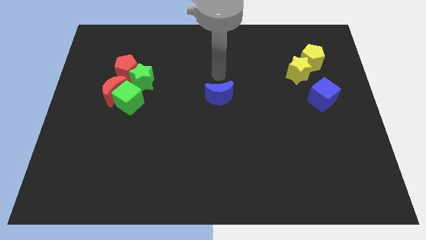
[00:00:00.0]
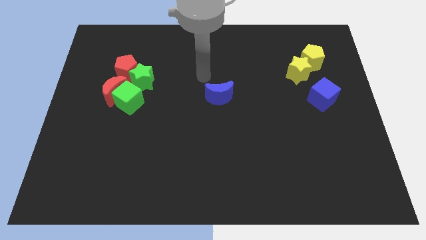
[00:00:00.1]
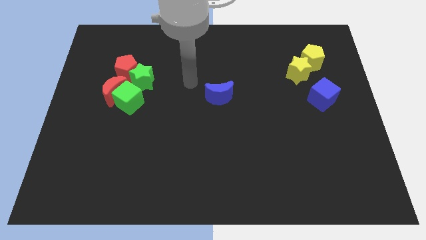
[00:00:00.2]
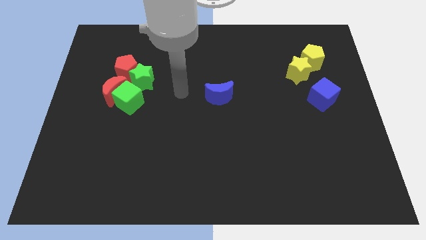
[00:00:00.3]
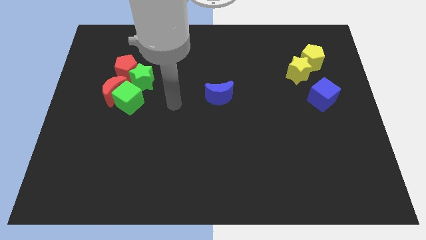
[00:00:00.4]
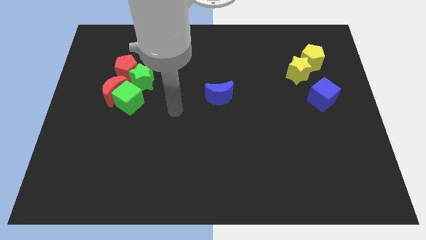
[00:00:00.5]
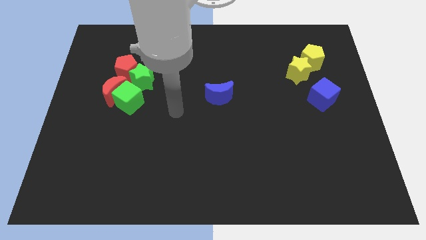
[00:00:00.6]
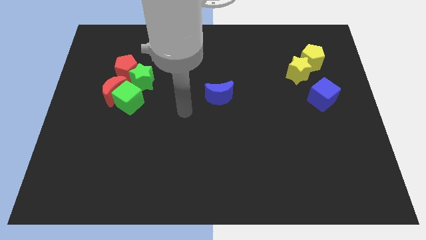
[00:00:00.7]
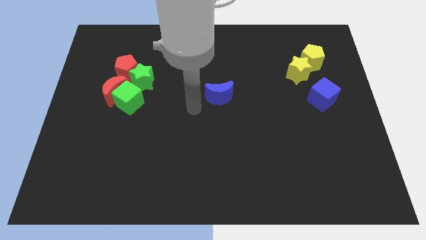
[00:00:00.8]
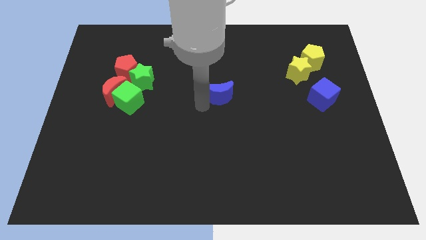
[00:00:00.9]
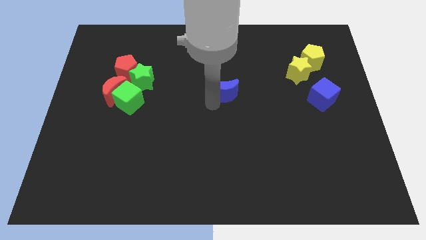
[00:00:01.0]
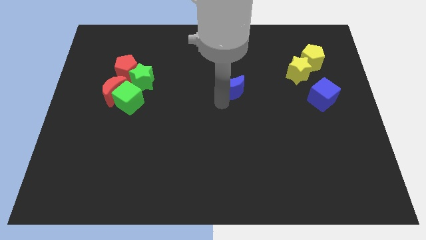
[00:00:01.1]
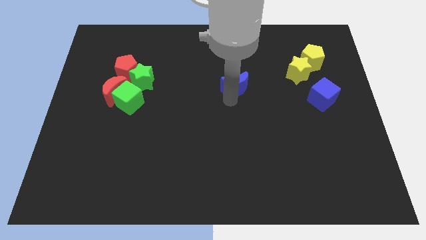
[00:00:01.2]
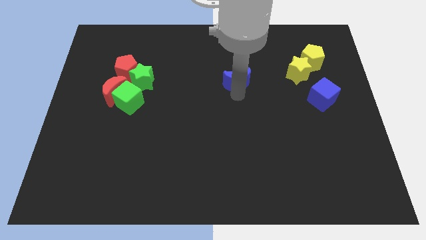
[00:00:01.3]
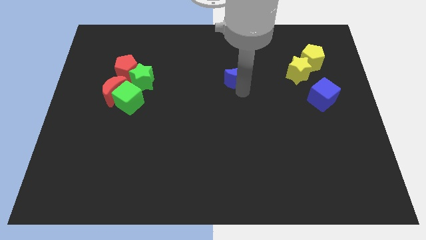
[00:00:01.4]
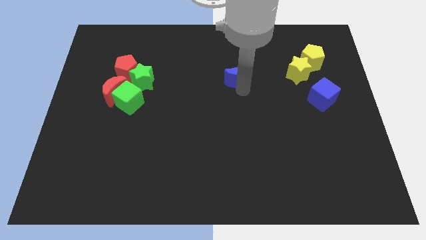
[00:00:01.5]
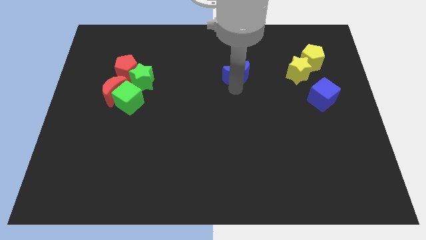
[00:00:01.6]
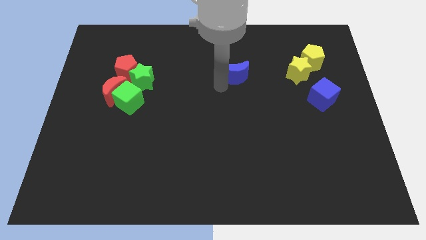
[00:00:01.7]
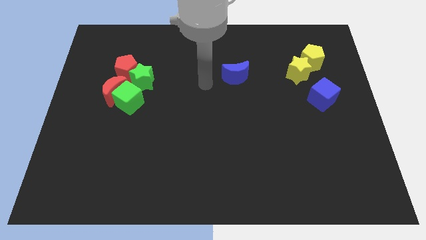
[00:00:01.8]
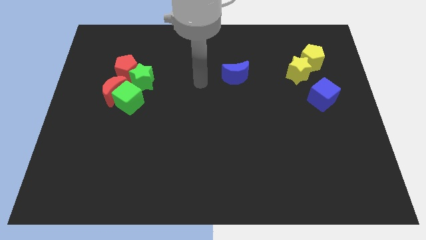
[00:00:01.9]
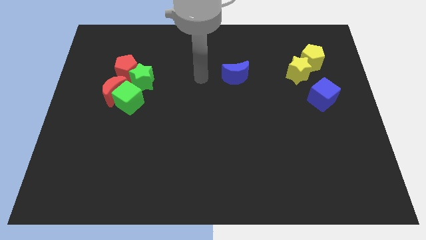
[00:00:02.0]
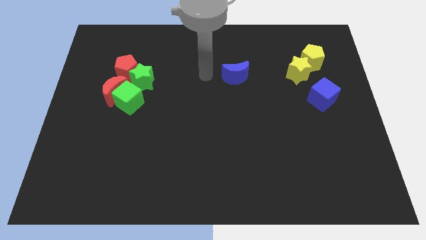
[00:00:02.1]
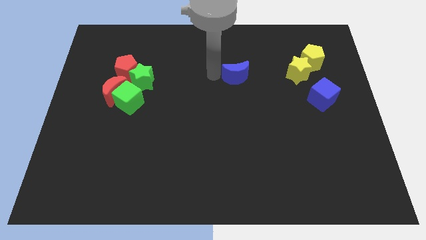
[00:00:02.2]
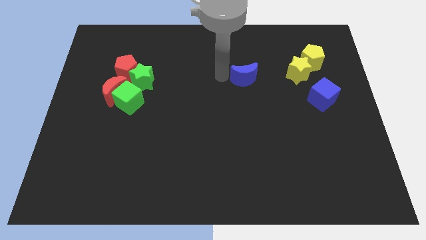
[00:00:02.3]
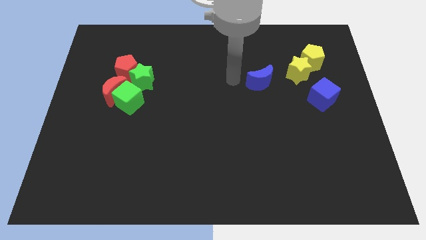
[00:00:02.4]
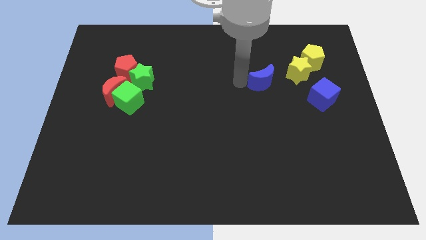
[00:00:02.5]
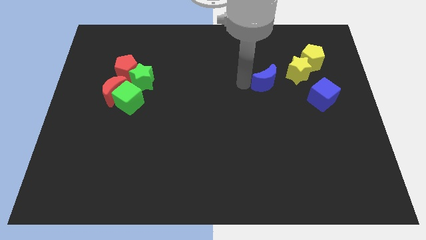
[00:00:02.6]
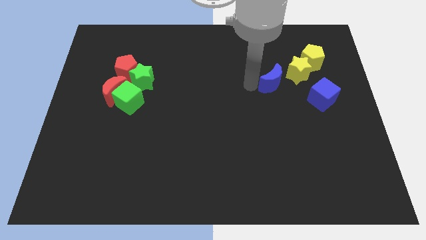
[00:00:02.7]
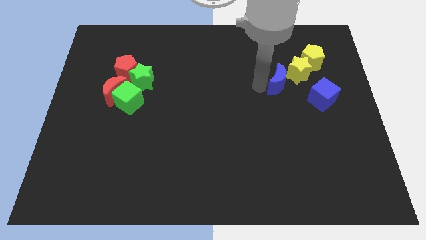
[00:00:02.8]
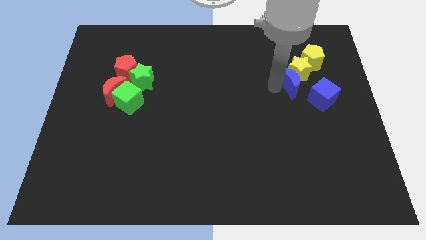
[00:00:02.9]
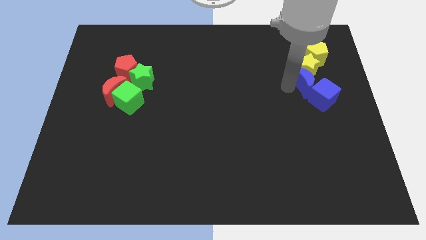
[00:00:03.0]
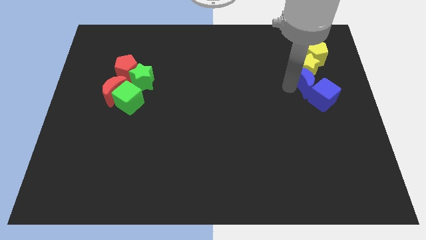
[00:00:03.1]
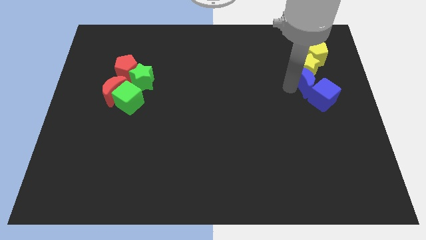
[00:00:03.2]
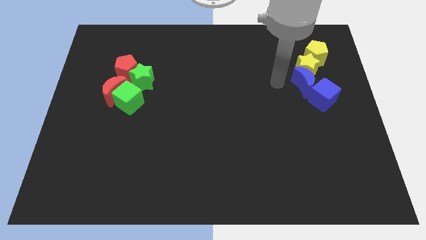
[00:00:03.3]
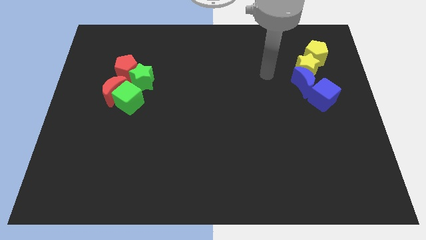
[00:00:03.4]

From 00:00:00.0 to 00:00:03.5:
put the blue crescent between the yellow blocks and blue cube

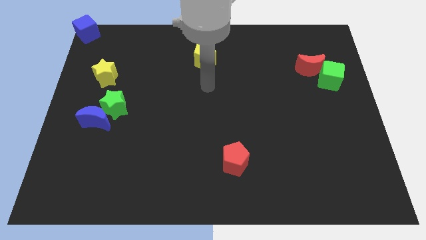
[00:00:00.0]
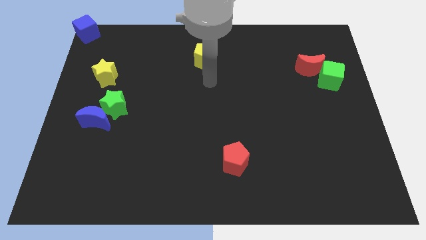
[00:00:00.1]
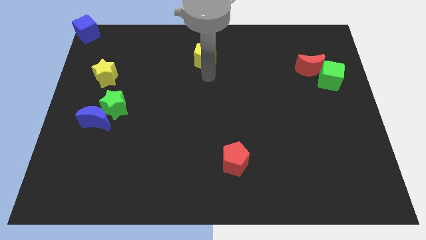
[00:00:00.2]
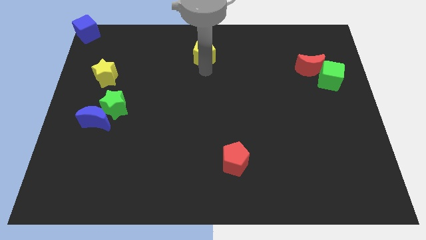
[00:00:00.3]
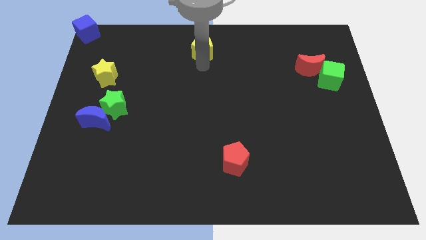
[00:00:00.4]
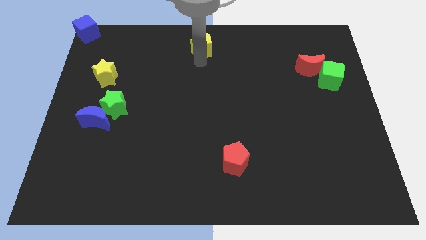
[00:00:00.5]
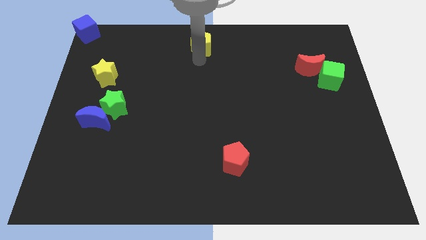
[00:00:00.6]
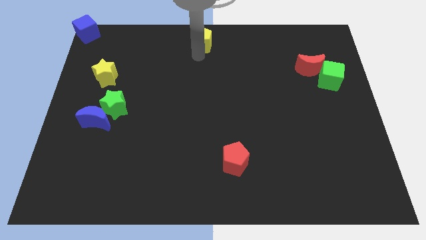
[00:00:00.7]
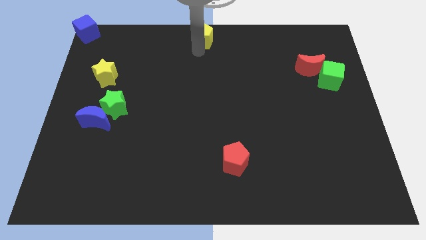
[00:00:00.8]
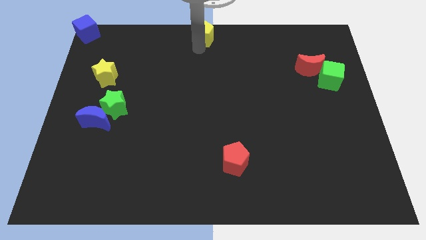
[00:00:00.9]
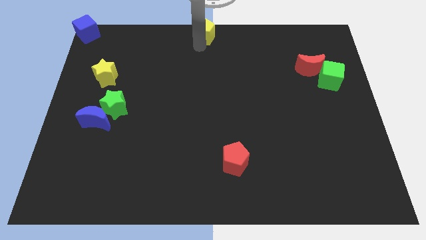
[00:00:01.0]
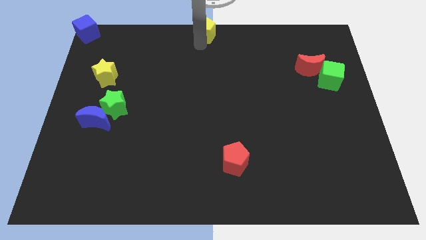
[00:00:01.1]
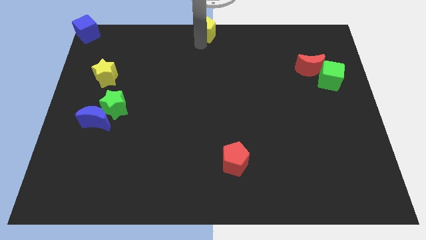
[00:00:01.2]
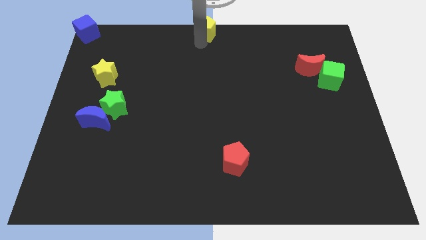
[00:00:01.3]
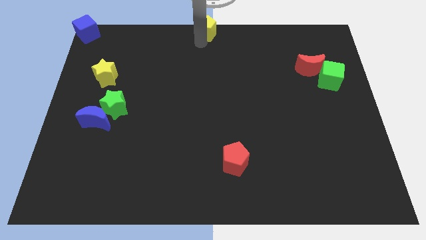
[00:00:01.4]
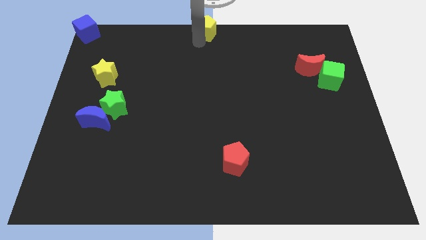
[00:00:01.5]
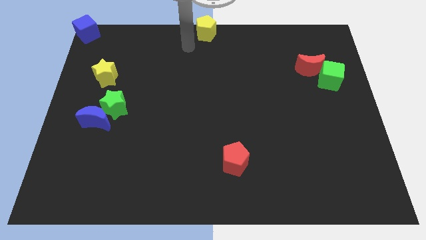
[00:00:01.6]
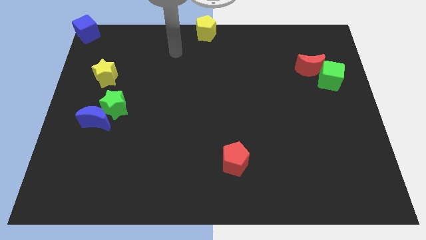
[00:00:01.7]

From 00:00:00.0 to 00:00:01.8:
push the yellow pentagon towards the top center

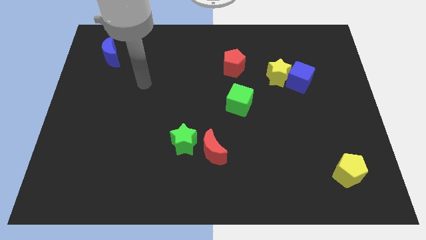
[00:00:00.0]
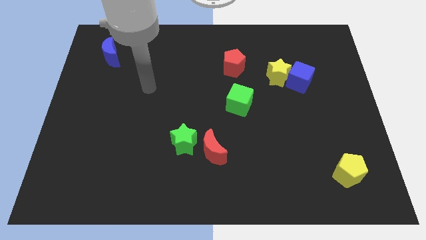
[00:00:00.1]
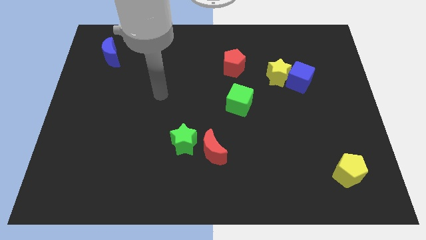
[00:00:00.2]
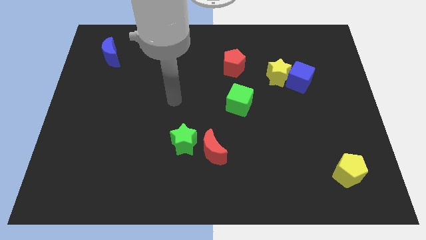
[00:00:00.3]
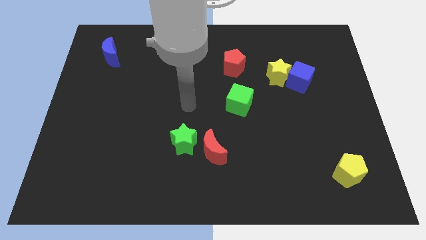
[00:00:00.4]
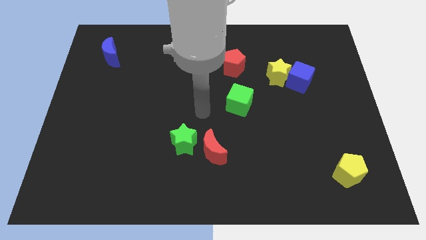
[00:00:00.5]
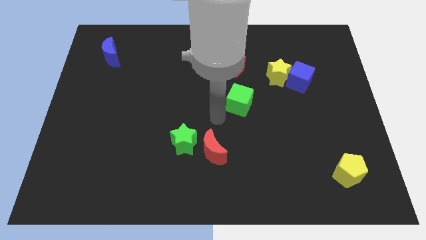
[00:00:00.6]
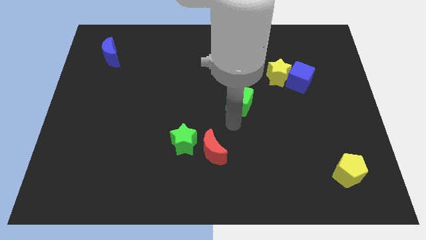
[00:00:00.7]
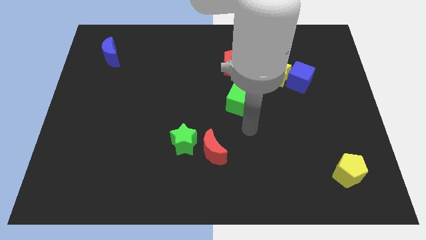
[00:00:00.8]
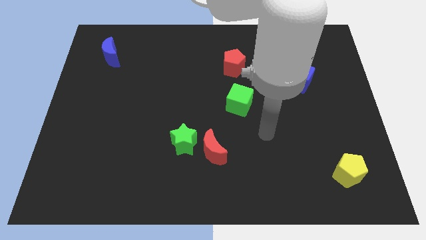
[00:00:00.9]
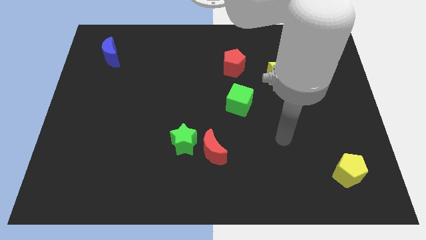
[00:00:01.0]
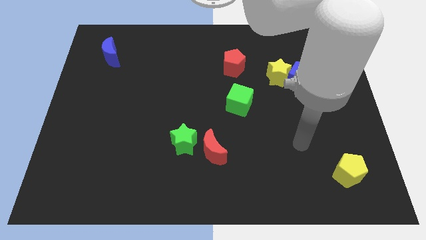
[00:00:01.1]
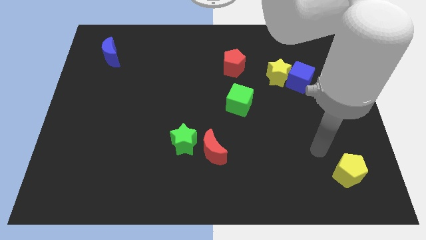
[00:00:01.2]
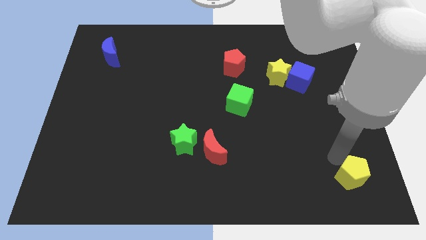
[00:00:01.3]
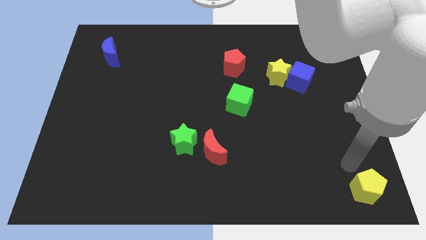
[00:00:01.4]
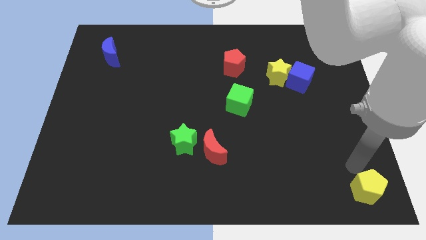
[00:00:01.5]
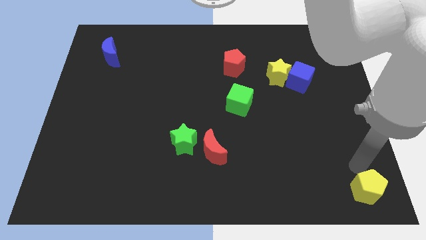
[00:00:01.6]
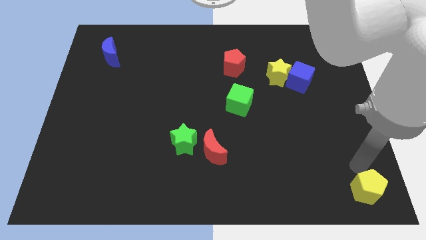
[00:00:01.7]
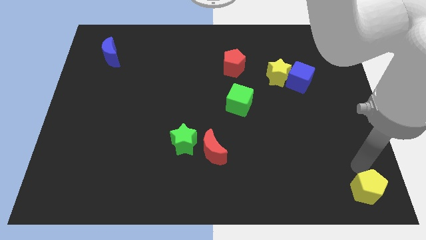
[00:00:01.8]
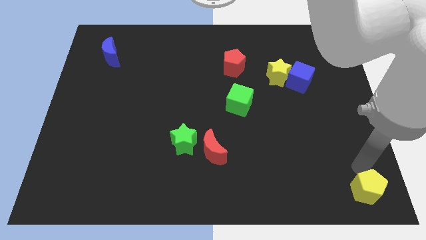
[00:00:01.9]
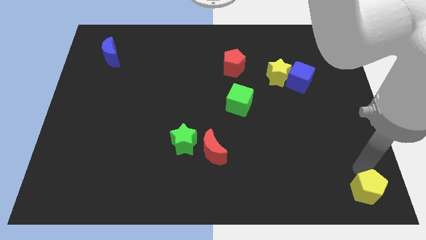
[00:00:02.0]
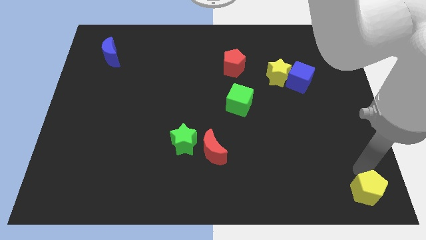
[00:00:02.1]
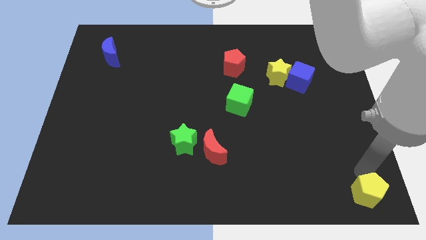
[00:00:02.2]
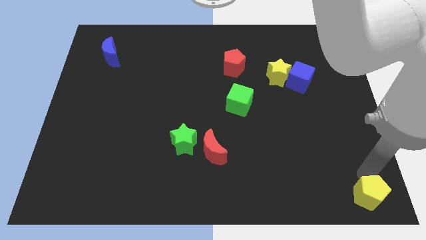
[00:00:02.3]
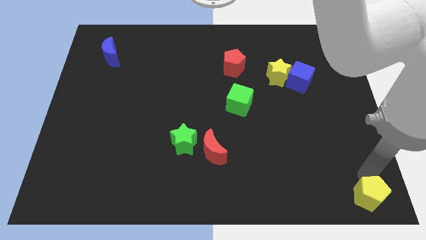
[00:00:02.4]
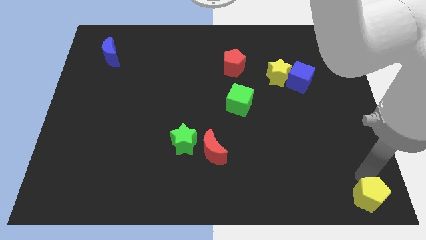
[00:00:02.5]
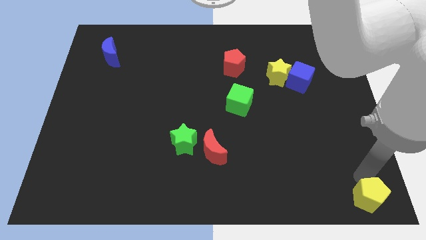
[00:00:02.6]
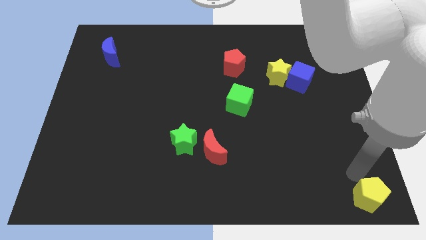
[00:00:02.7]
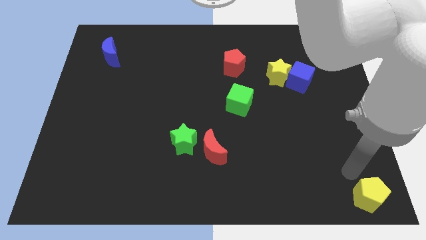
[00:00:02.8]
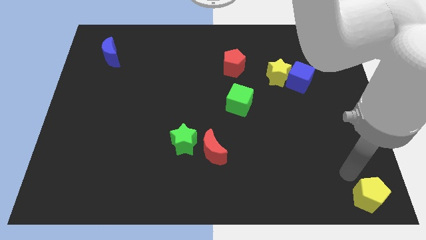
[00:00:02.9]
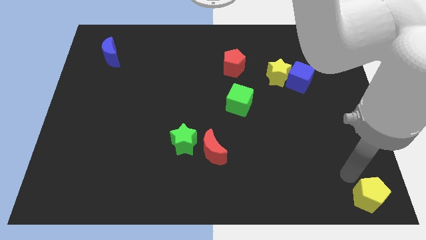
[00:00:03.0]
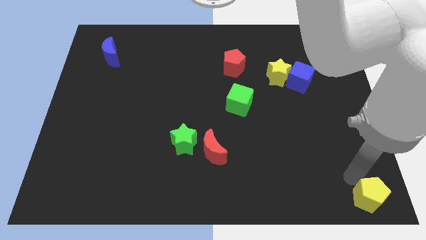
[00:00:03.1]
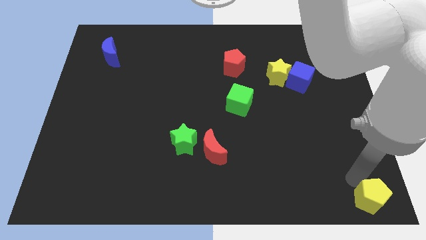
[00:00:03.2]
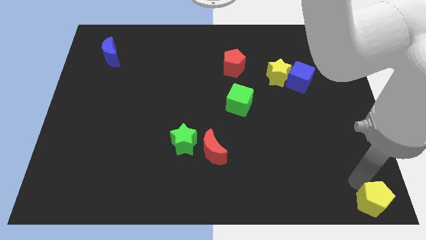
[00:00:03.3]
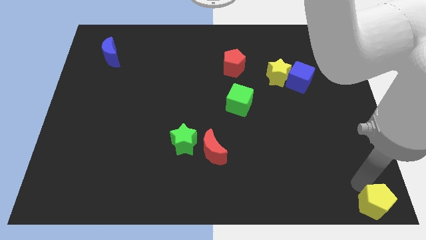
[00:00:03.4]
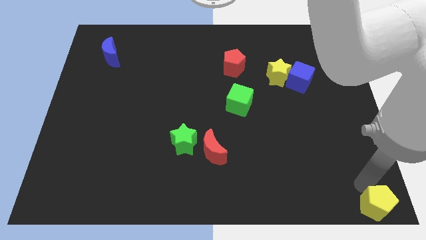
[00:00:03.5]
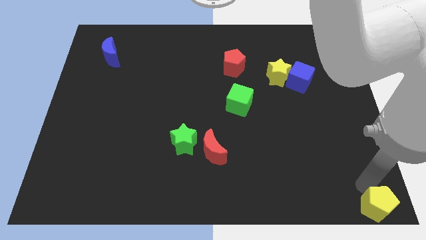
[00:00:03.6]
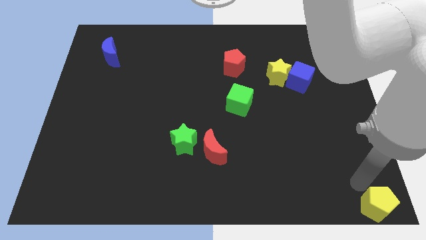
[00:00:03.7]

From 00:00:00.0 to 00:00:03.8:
go and move the yellow pentagon to the bottom right corner
